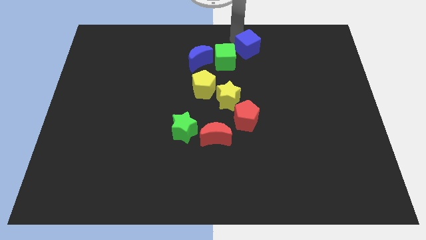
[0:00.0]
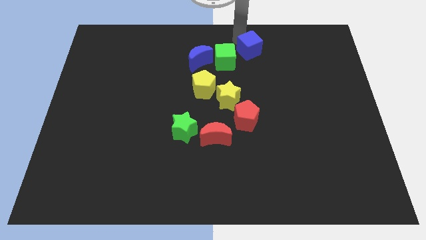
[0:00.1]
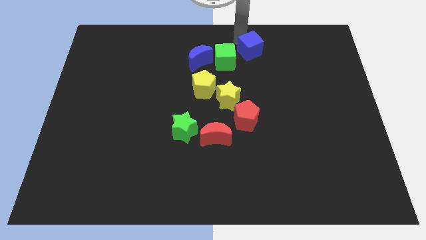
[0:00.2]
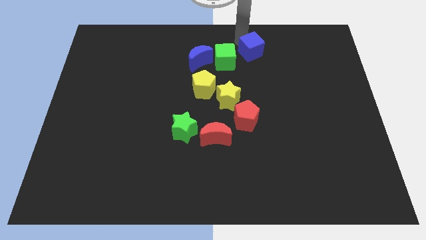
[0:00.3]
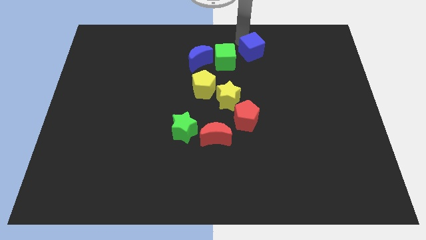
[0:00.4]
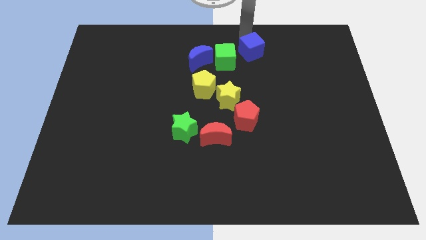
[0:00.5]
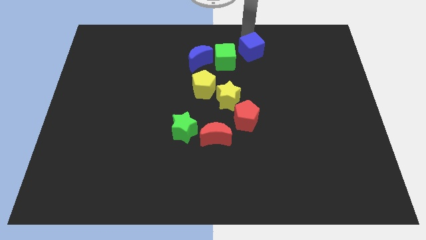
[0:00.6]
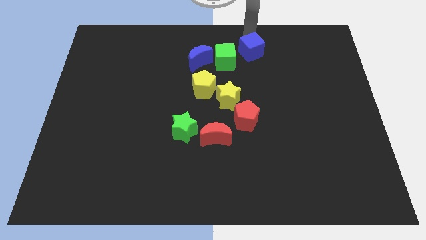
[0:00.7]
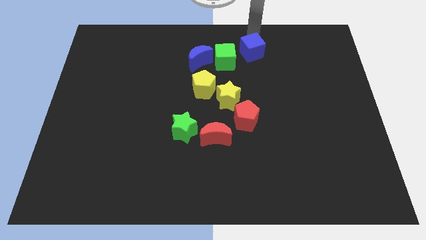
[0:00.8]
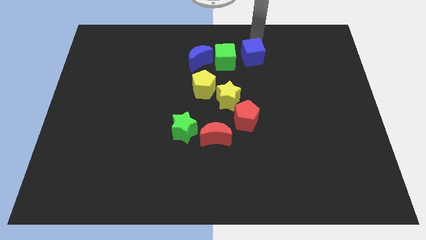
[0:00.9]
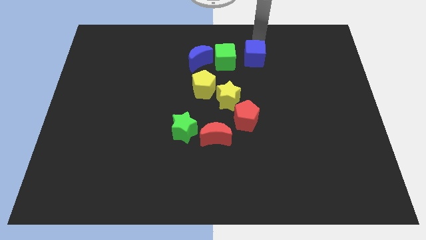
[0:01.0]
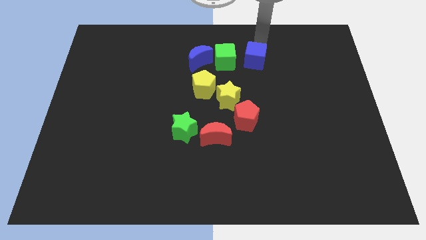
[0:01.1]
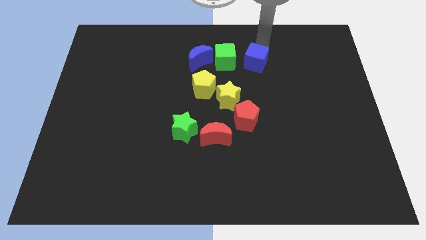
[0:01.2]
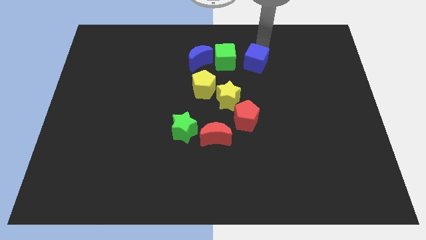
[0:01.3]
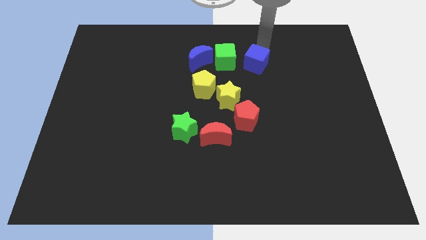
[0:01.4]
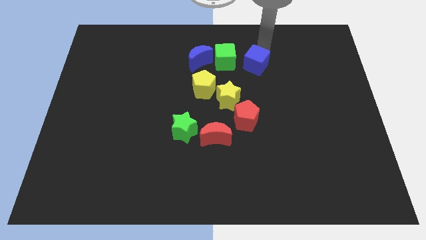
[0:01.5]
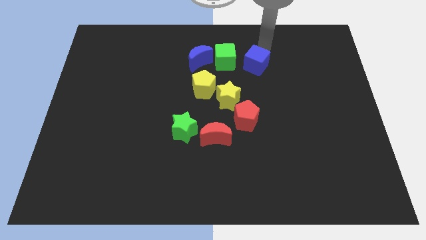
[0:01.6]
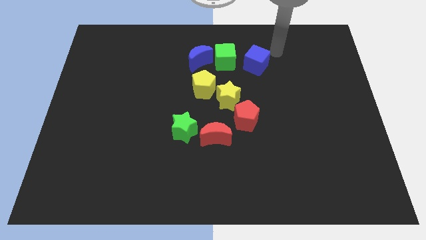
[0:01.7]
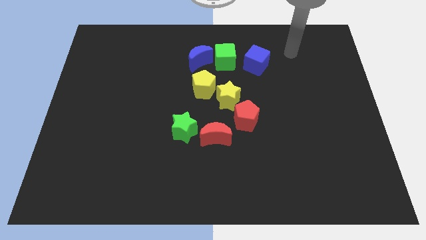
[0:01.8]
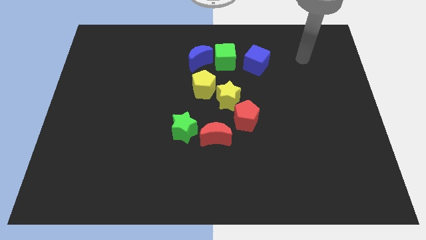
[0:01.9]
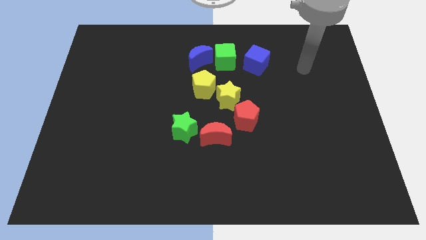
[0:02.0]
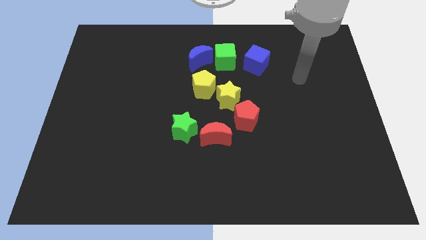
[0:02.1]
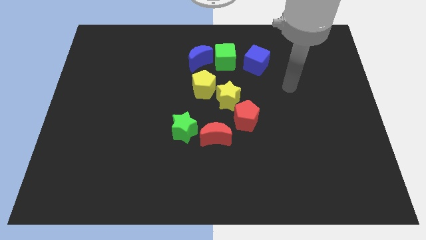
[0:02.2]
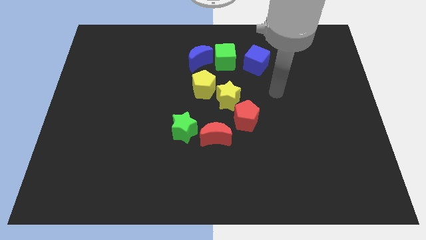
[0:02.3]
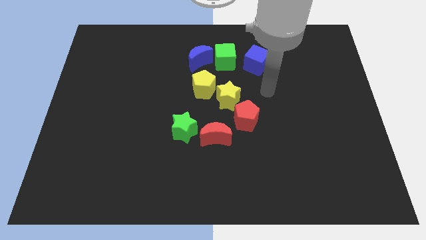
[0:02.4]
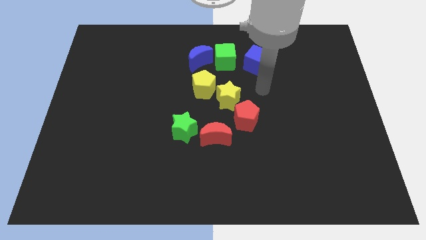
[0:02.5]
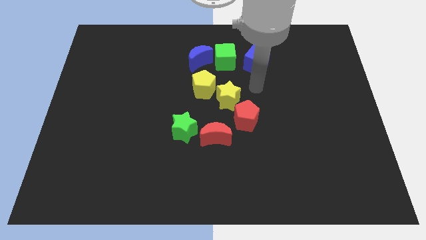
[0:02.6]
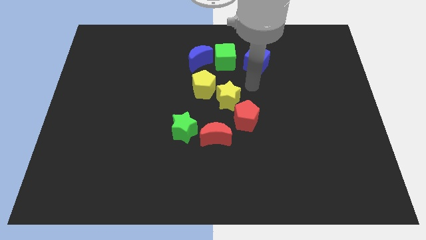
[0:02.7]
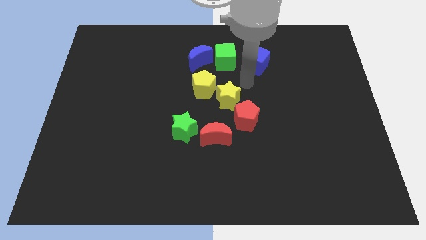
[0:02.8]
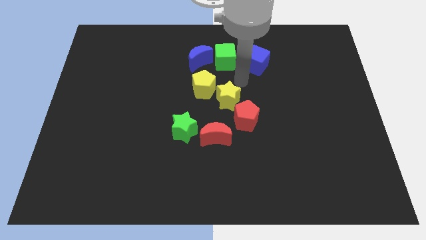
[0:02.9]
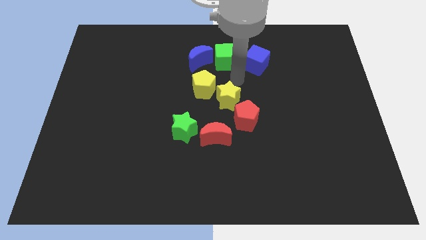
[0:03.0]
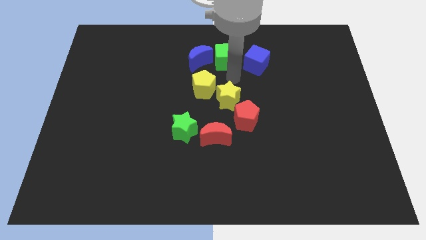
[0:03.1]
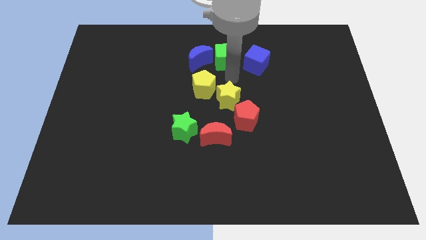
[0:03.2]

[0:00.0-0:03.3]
move the blue cube right to the green cube

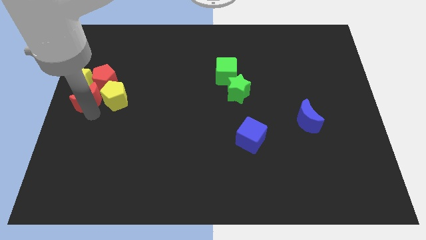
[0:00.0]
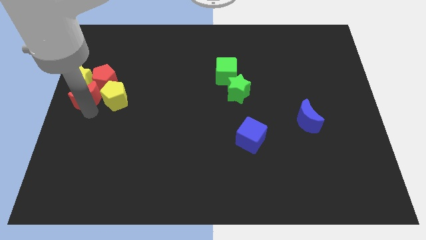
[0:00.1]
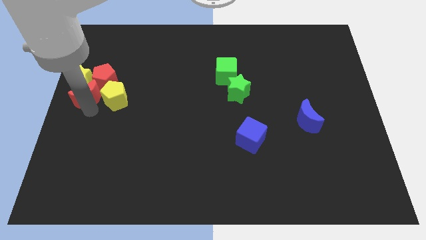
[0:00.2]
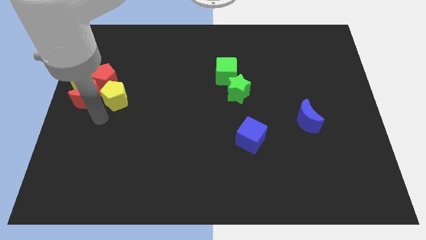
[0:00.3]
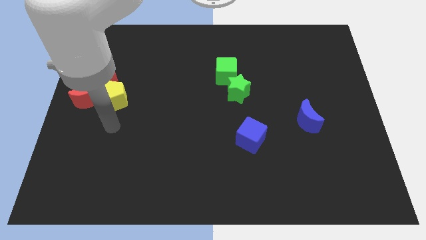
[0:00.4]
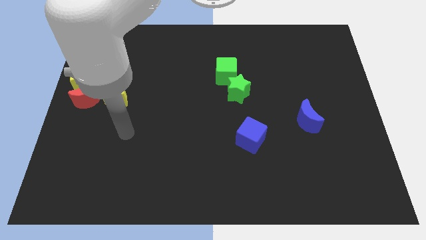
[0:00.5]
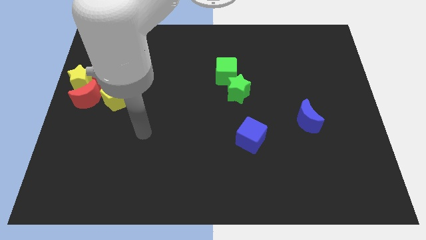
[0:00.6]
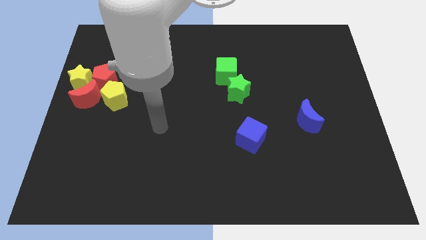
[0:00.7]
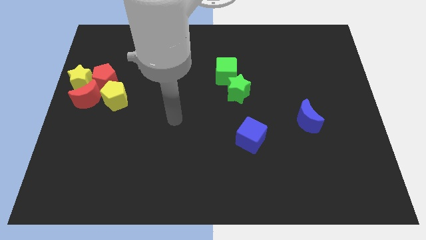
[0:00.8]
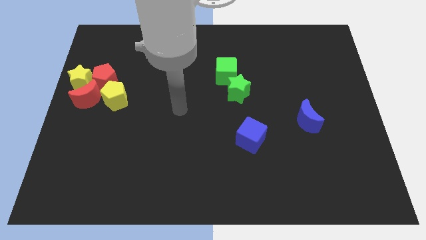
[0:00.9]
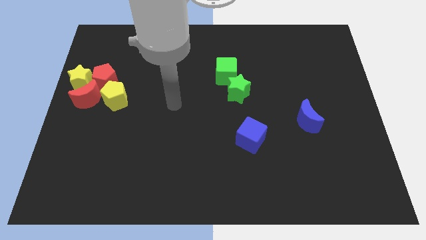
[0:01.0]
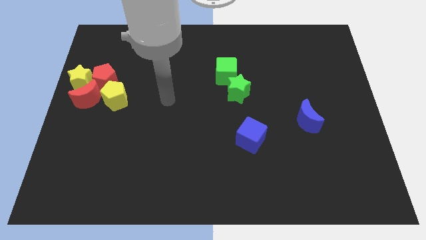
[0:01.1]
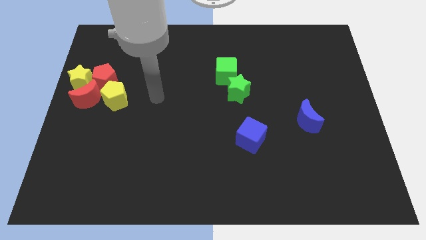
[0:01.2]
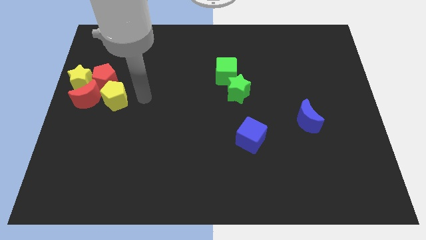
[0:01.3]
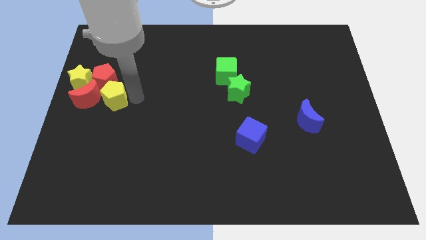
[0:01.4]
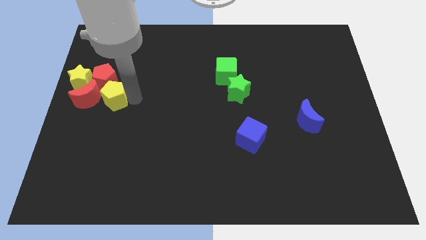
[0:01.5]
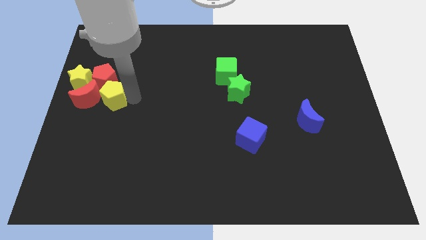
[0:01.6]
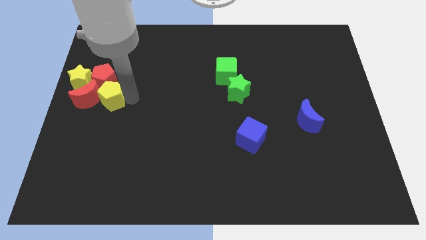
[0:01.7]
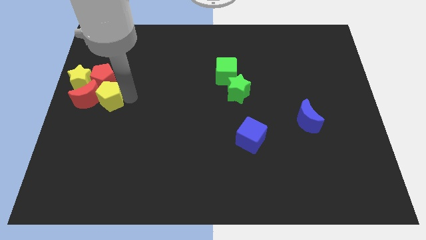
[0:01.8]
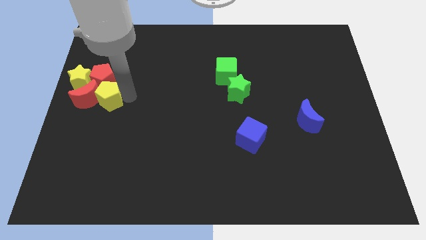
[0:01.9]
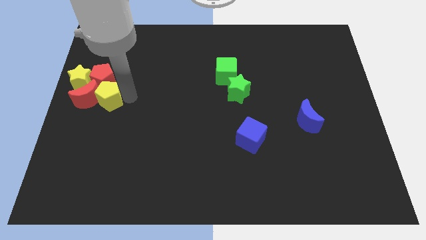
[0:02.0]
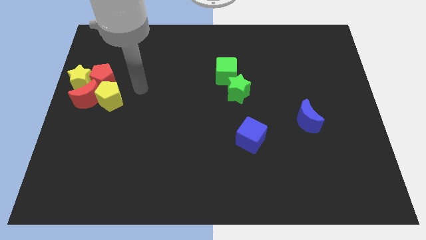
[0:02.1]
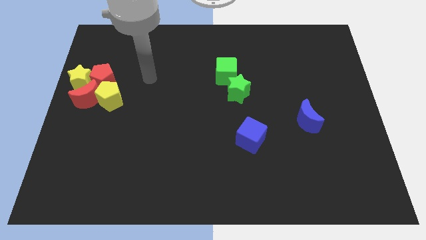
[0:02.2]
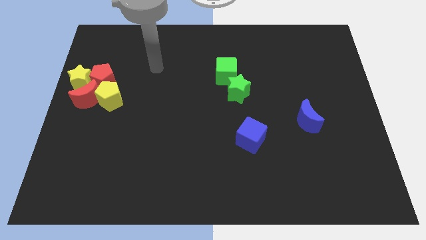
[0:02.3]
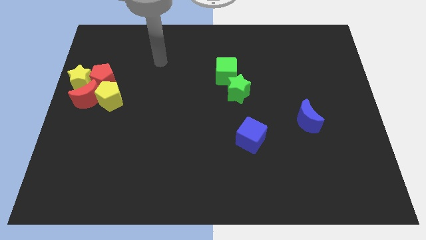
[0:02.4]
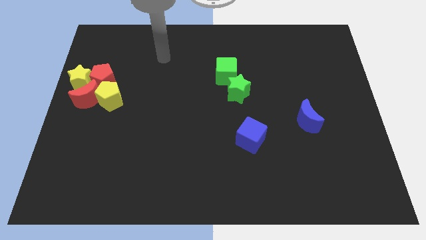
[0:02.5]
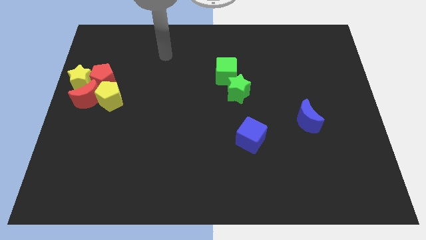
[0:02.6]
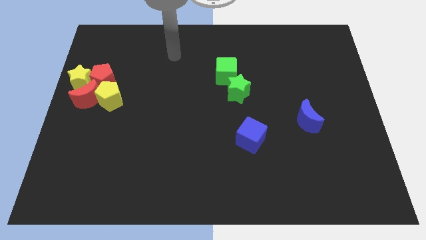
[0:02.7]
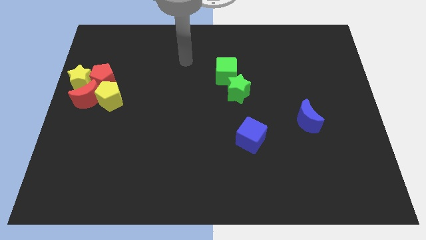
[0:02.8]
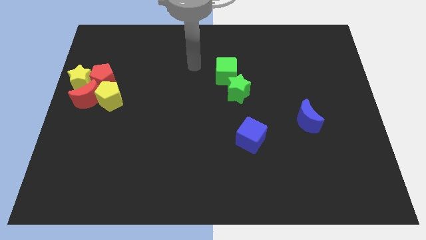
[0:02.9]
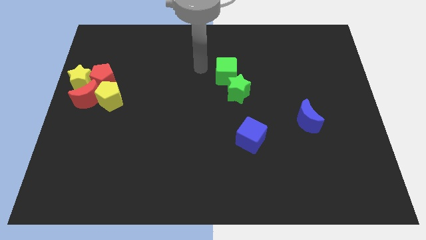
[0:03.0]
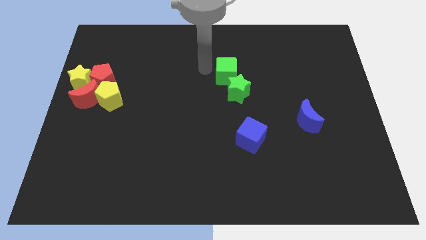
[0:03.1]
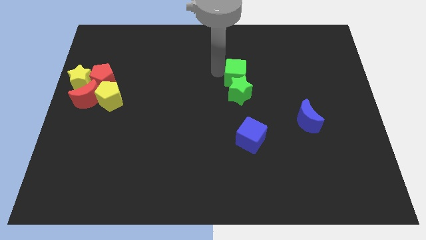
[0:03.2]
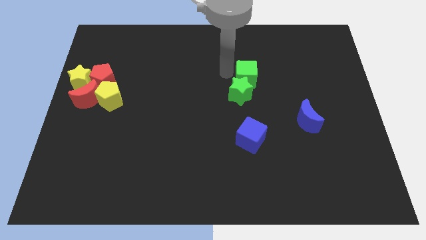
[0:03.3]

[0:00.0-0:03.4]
push your arm away from the group of the blocks

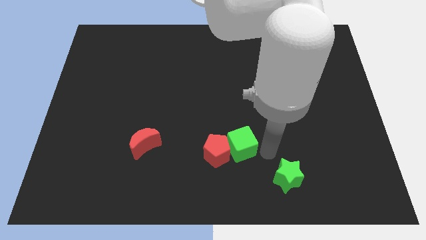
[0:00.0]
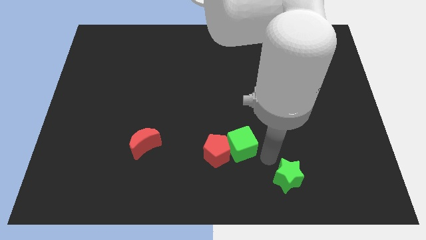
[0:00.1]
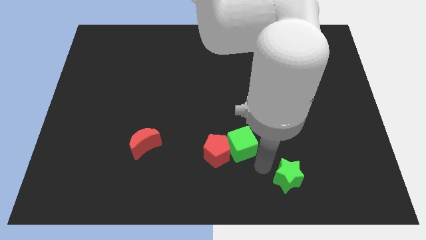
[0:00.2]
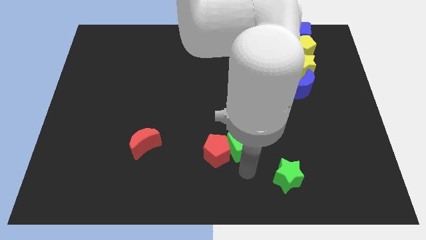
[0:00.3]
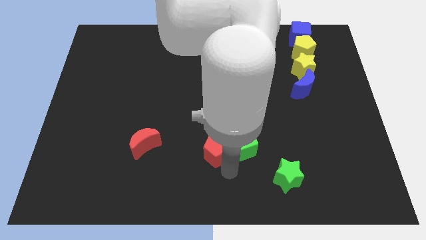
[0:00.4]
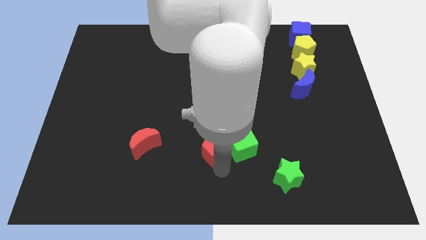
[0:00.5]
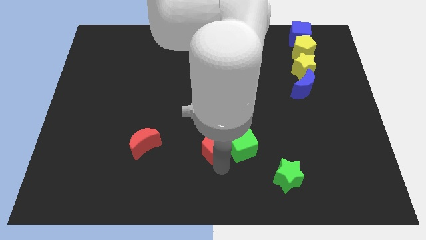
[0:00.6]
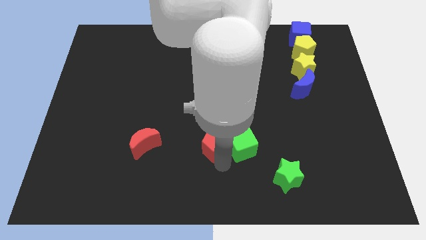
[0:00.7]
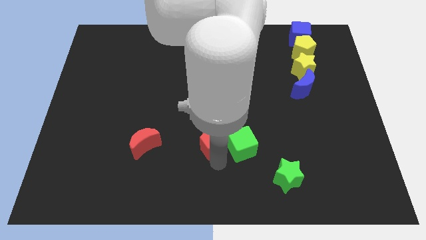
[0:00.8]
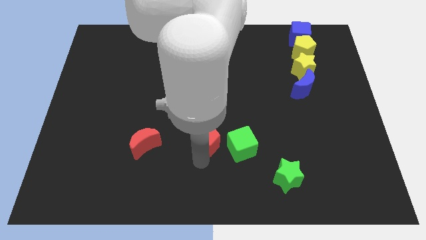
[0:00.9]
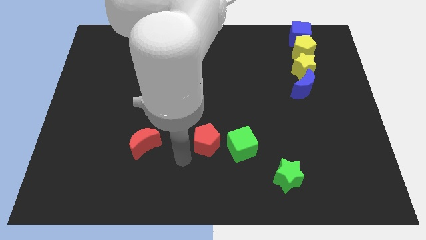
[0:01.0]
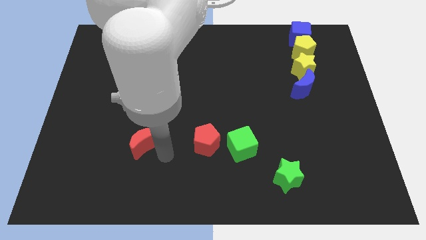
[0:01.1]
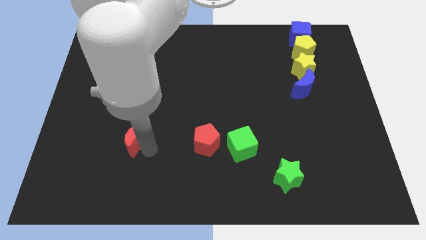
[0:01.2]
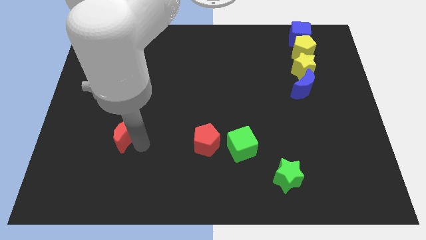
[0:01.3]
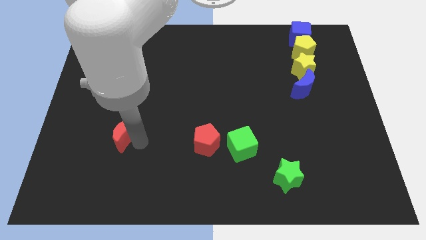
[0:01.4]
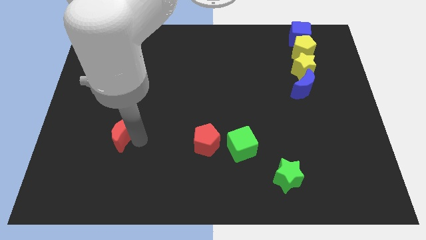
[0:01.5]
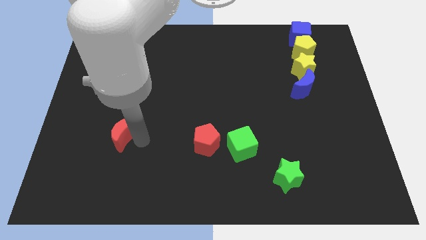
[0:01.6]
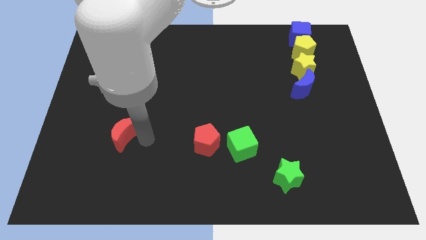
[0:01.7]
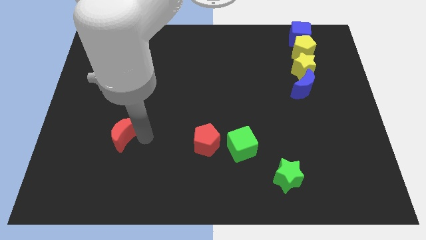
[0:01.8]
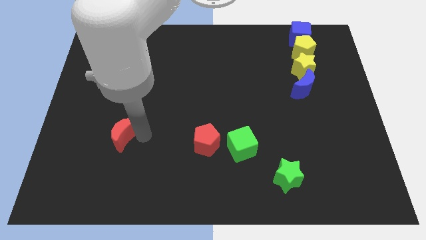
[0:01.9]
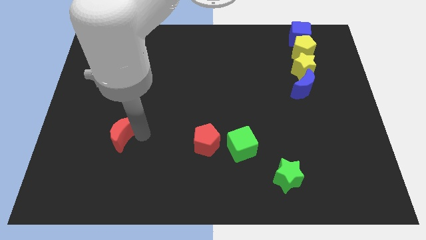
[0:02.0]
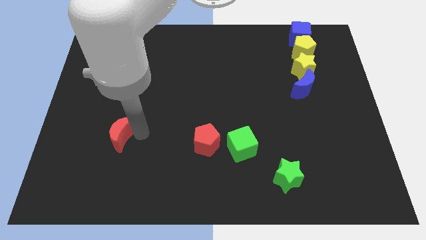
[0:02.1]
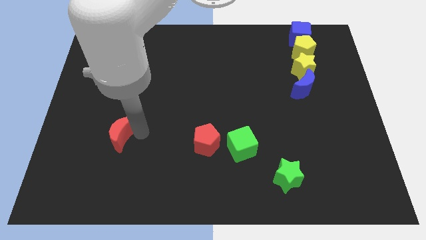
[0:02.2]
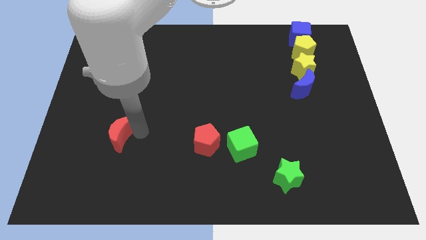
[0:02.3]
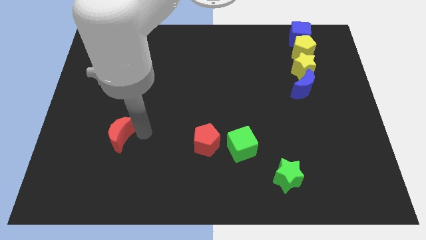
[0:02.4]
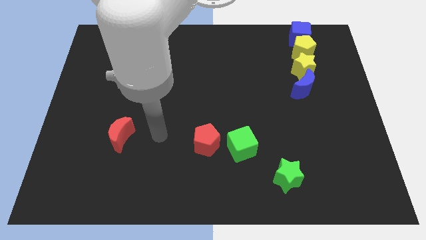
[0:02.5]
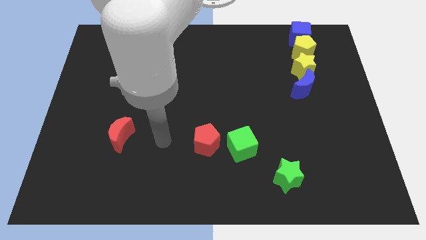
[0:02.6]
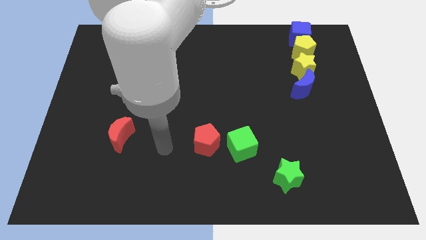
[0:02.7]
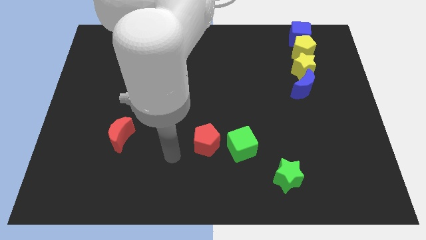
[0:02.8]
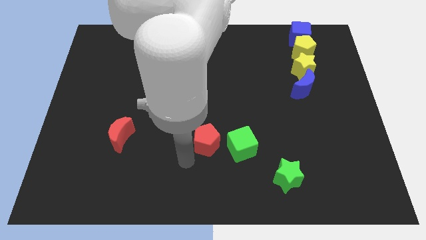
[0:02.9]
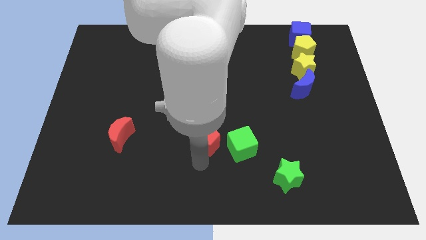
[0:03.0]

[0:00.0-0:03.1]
separate the green cube and the red pentagon
